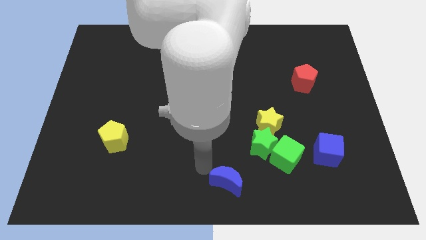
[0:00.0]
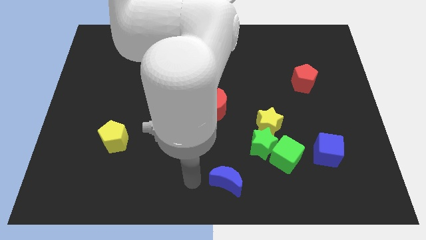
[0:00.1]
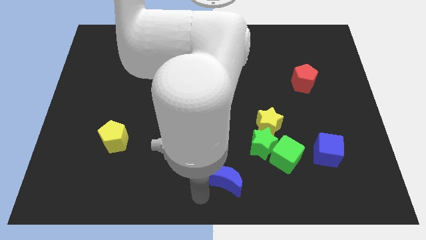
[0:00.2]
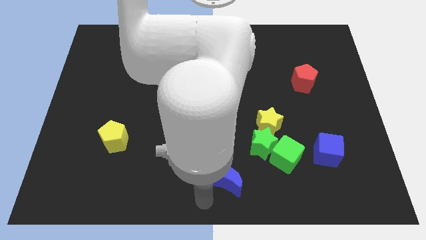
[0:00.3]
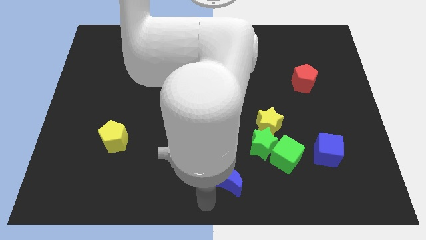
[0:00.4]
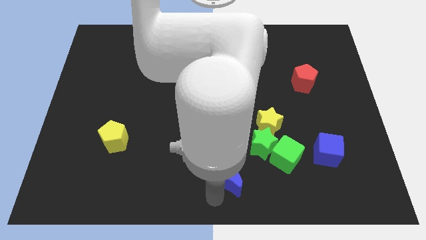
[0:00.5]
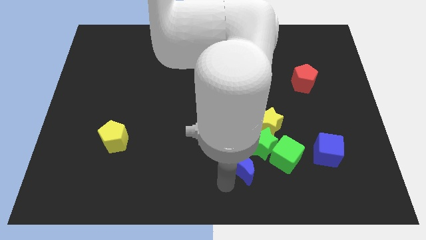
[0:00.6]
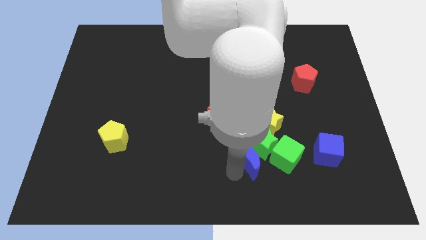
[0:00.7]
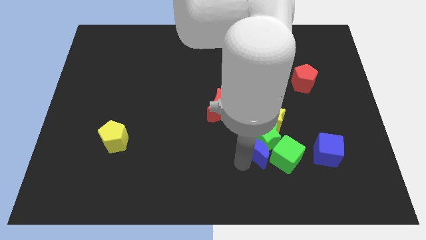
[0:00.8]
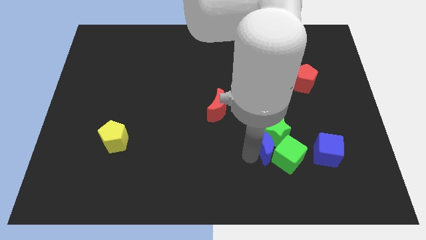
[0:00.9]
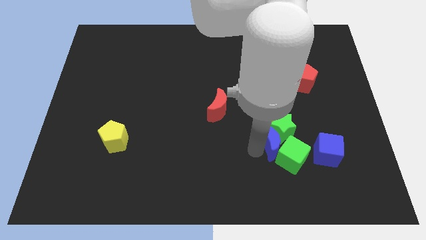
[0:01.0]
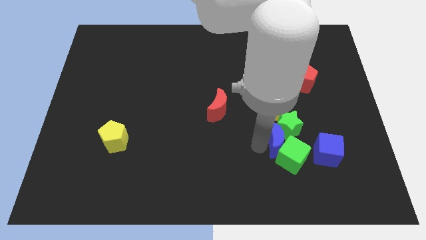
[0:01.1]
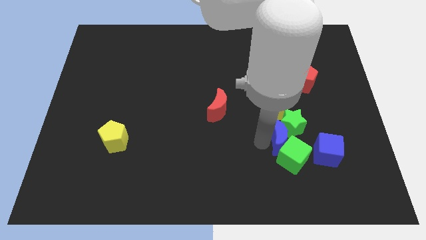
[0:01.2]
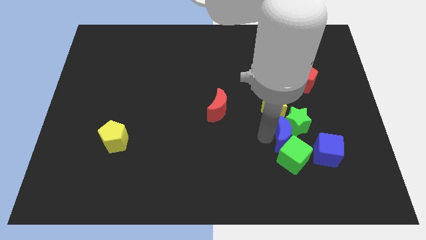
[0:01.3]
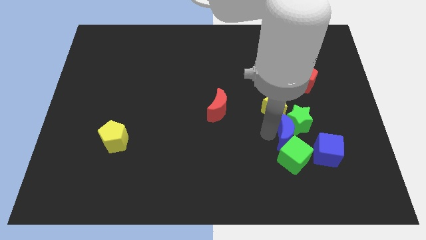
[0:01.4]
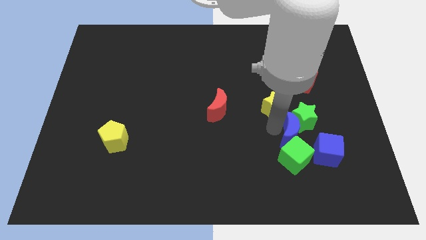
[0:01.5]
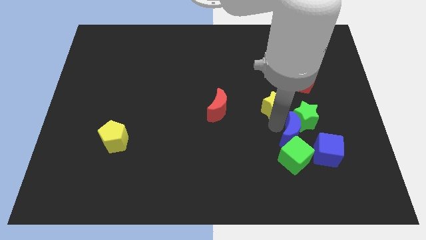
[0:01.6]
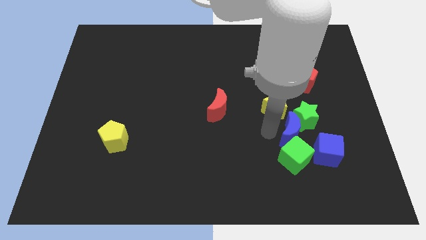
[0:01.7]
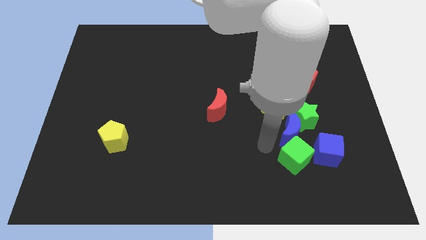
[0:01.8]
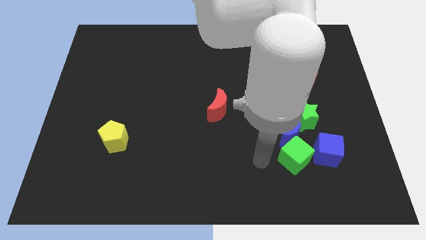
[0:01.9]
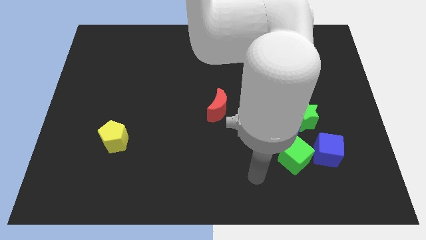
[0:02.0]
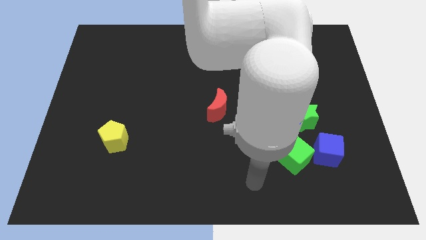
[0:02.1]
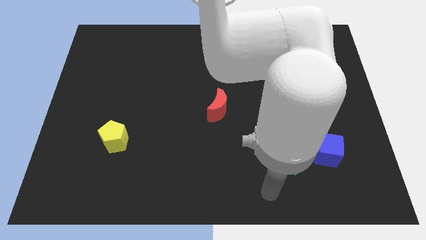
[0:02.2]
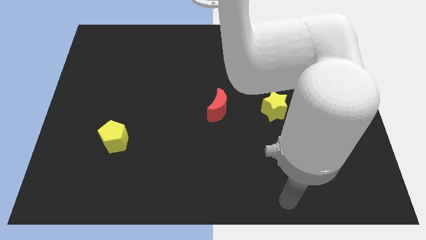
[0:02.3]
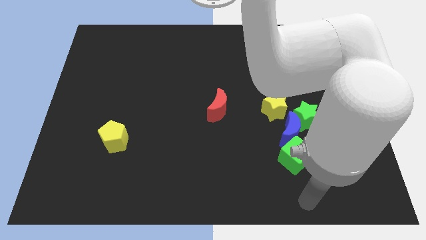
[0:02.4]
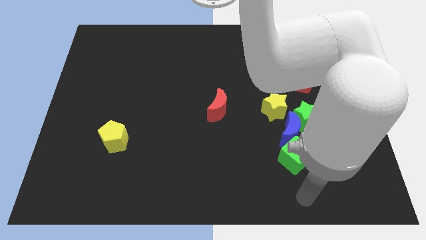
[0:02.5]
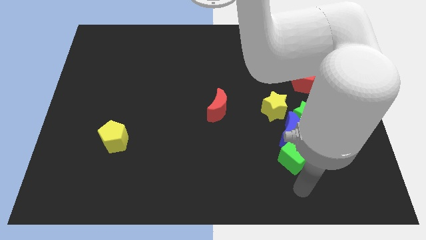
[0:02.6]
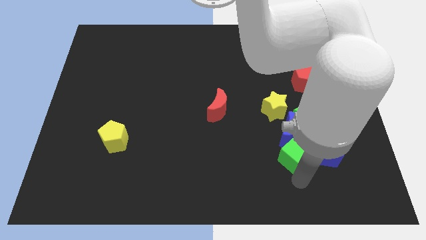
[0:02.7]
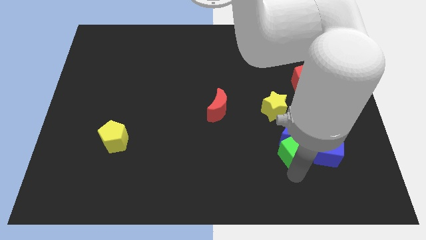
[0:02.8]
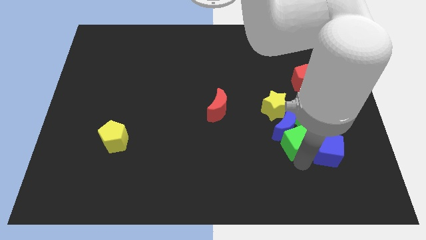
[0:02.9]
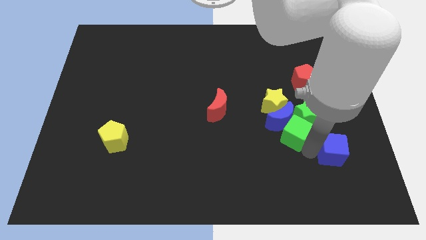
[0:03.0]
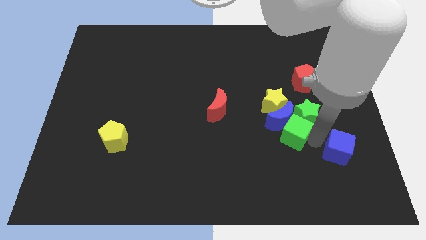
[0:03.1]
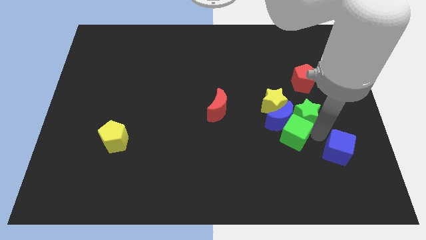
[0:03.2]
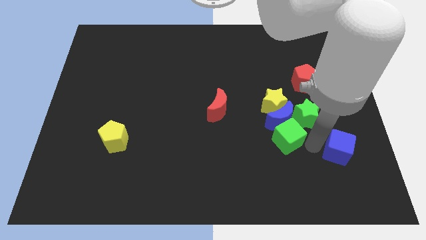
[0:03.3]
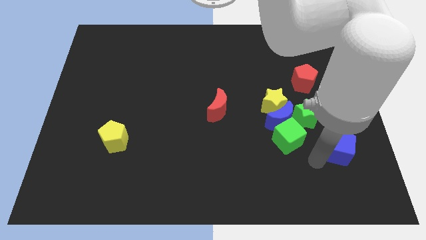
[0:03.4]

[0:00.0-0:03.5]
push blue moon and green cube in to green star

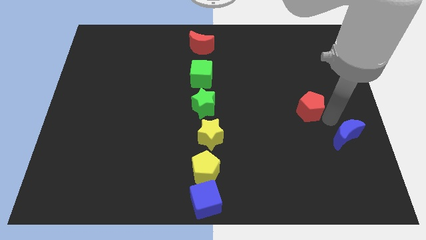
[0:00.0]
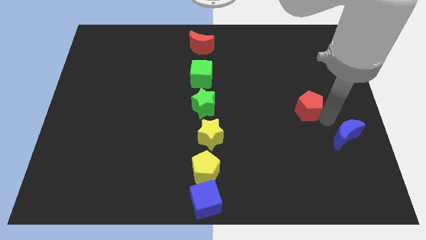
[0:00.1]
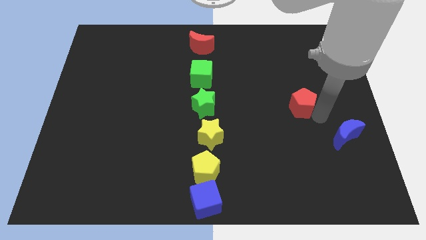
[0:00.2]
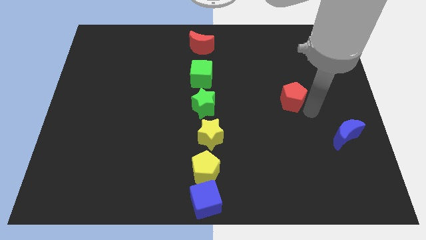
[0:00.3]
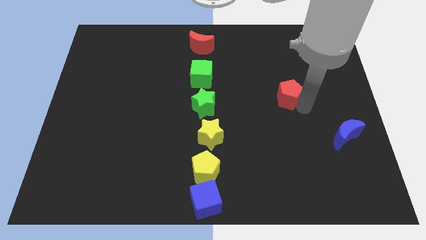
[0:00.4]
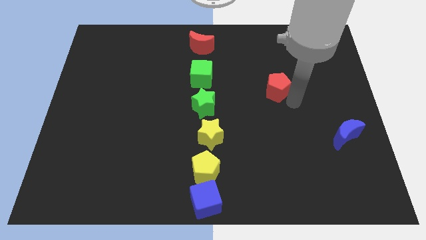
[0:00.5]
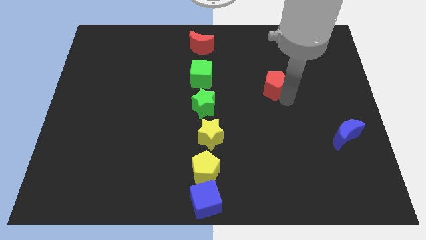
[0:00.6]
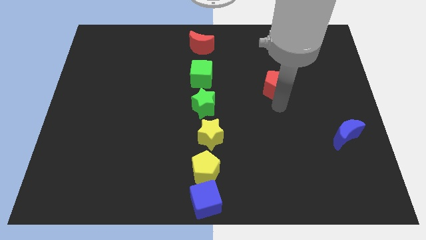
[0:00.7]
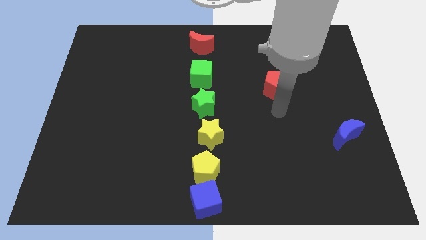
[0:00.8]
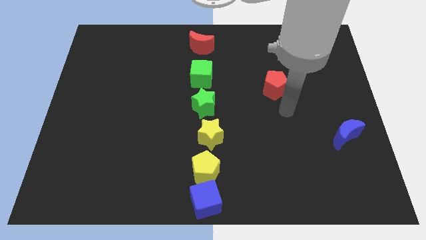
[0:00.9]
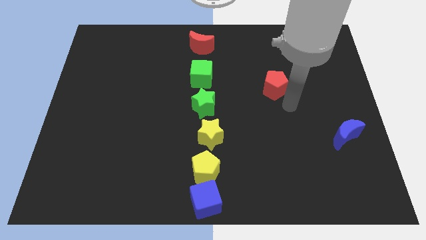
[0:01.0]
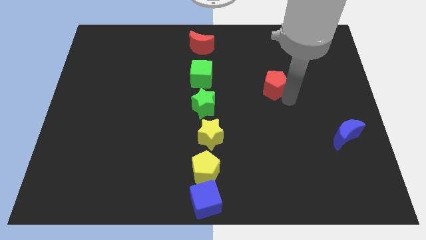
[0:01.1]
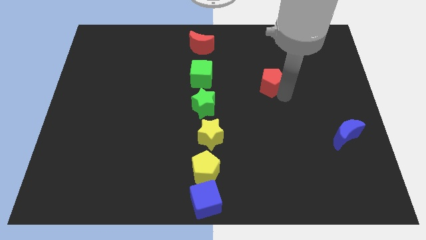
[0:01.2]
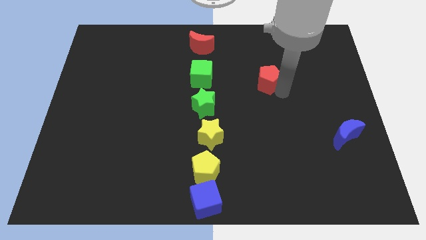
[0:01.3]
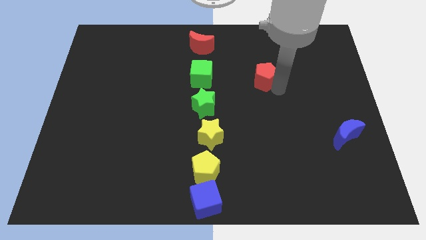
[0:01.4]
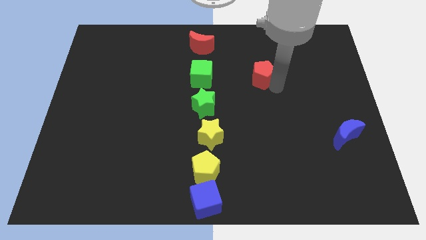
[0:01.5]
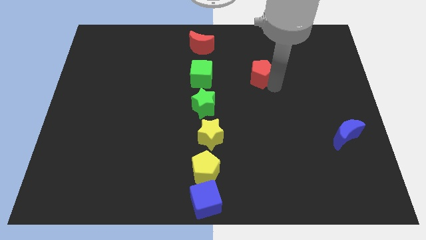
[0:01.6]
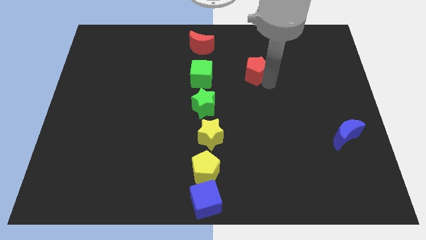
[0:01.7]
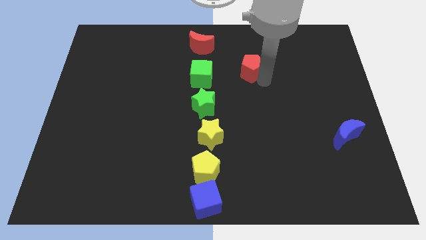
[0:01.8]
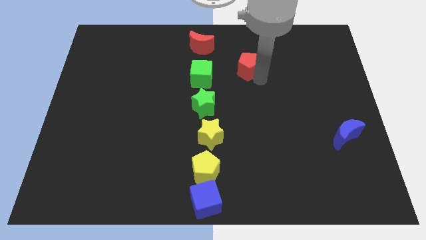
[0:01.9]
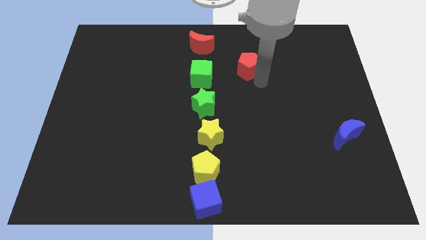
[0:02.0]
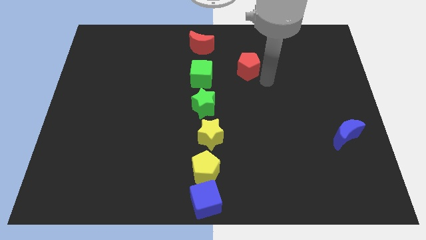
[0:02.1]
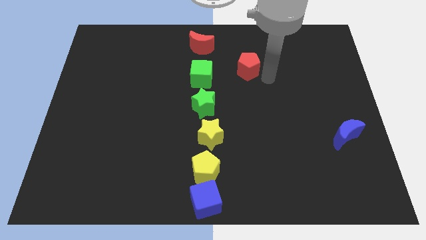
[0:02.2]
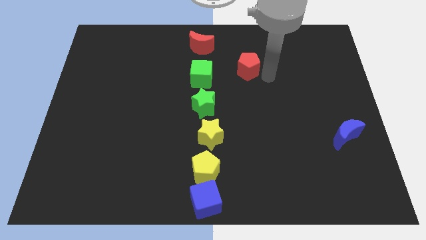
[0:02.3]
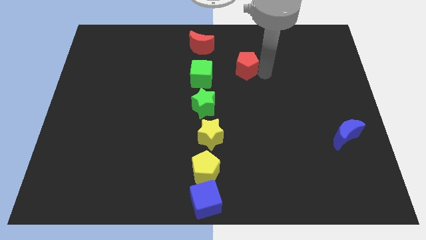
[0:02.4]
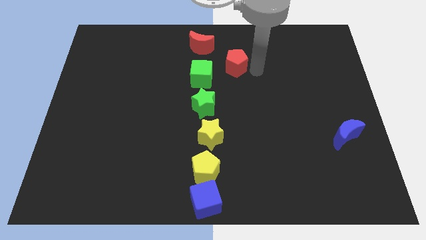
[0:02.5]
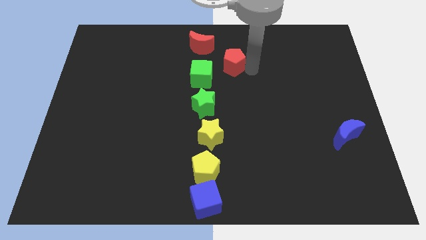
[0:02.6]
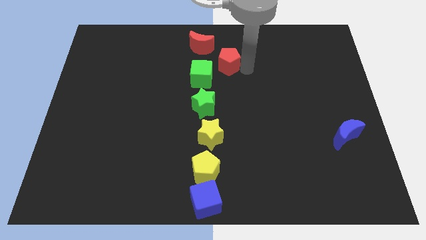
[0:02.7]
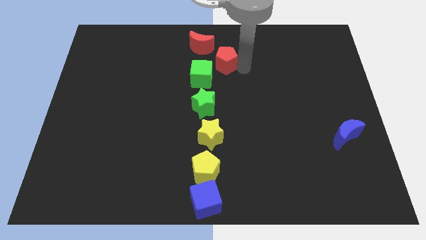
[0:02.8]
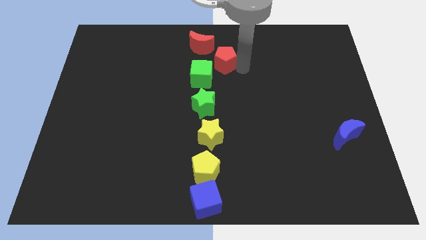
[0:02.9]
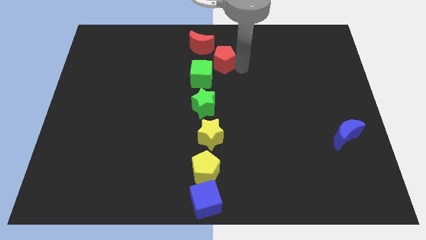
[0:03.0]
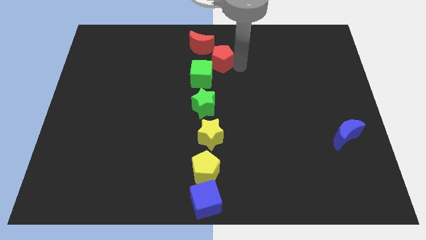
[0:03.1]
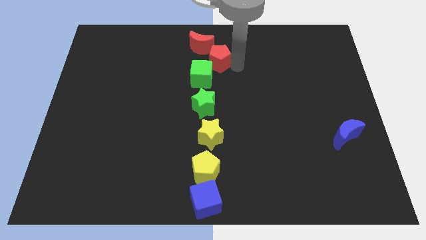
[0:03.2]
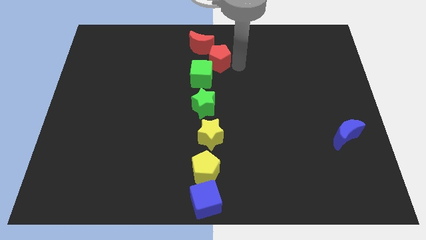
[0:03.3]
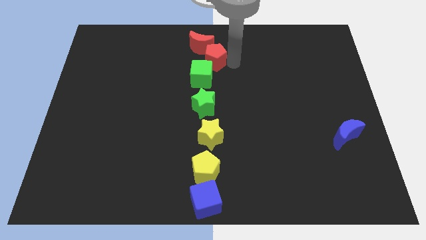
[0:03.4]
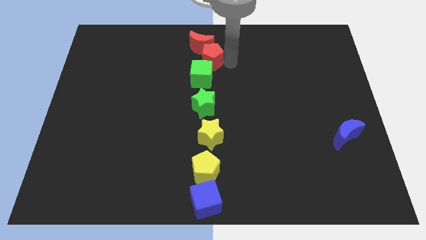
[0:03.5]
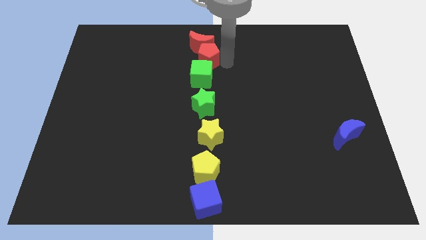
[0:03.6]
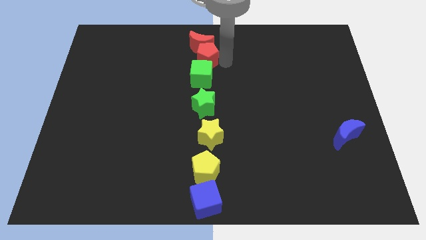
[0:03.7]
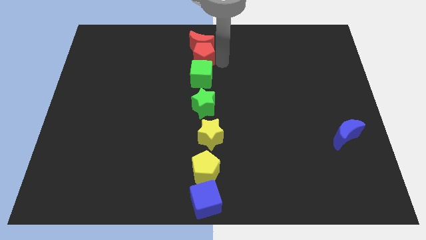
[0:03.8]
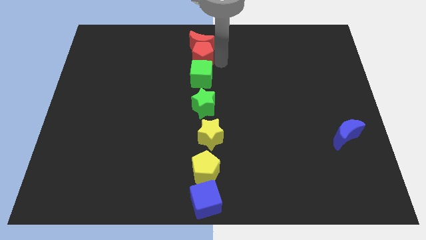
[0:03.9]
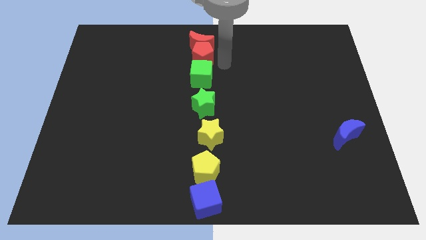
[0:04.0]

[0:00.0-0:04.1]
place the red pentagon in between the red crescent and the green cube

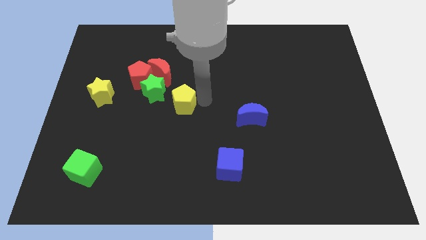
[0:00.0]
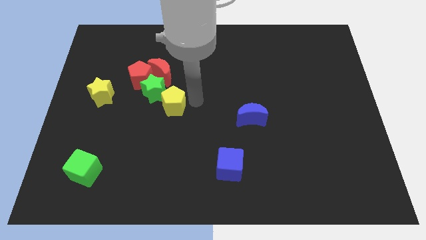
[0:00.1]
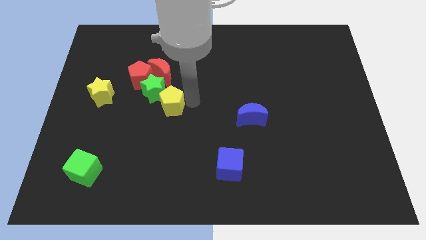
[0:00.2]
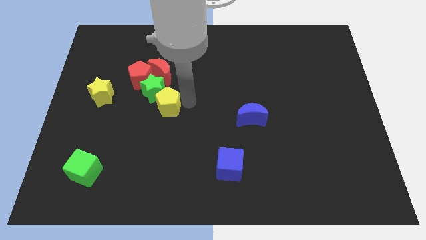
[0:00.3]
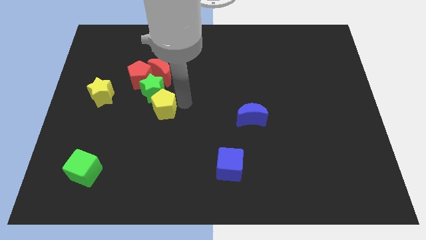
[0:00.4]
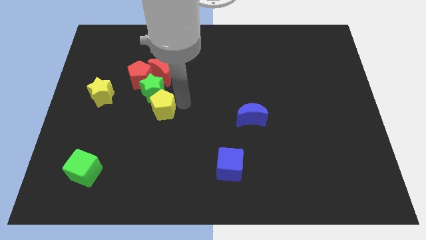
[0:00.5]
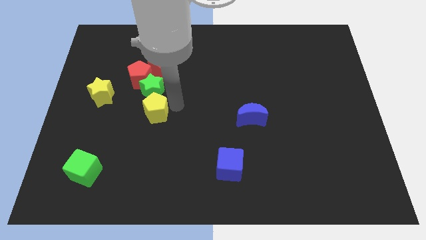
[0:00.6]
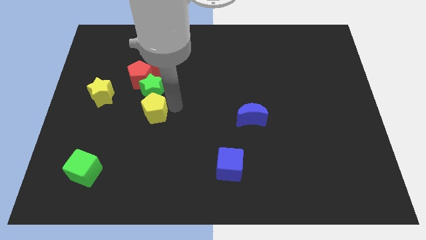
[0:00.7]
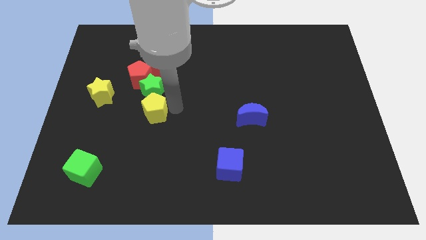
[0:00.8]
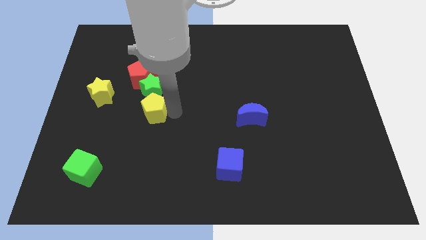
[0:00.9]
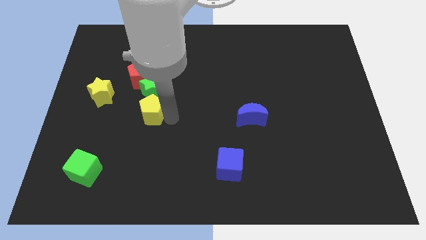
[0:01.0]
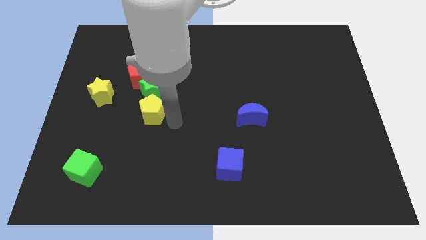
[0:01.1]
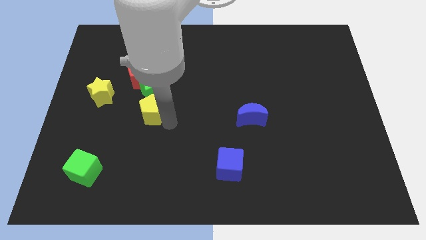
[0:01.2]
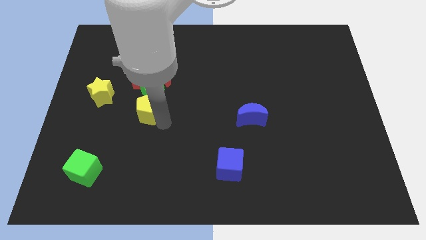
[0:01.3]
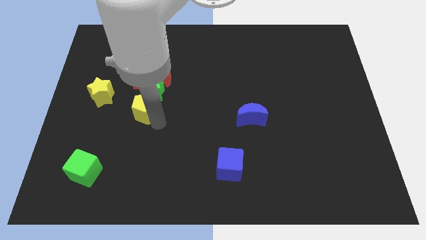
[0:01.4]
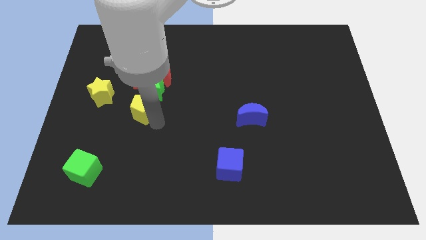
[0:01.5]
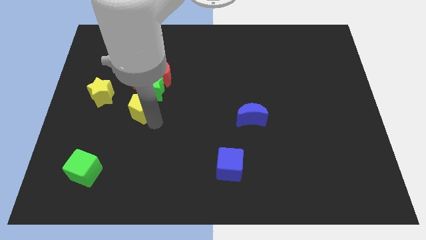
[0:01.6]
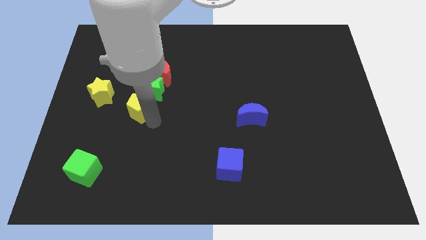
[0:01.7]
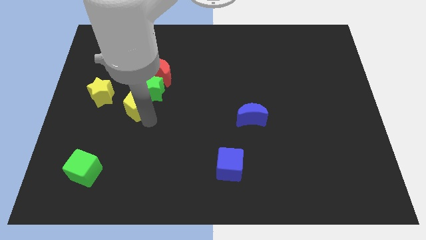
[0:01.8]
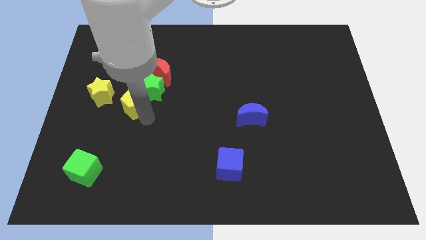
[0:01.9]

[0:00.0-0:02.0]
push the yellow pentagon below the green star
